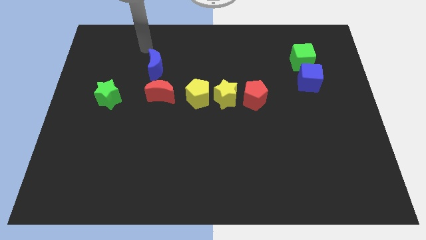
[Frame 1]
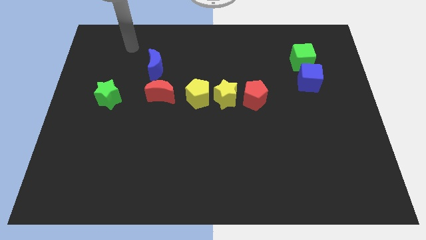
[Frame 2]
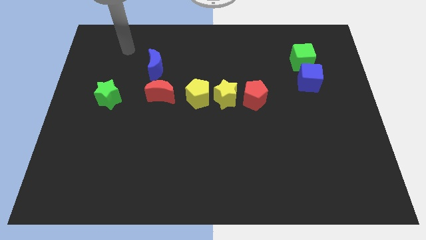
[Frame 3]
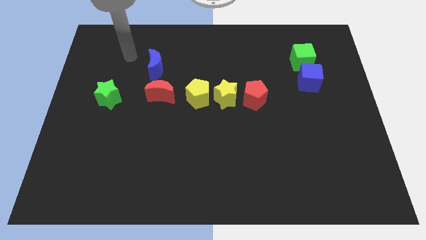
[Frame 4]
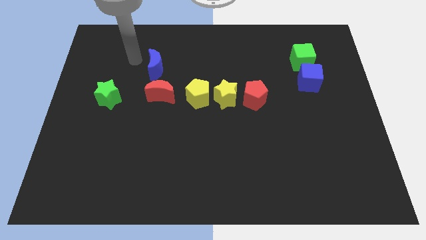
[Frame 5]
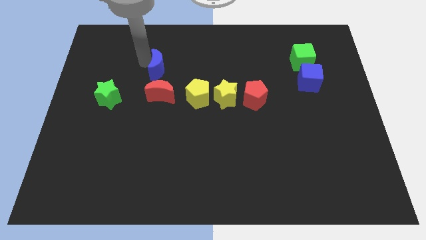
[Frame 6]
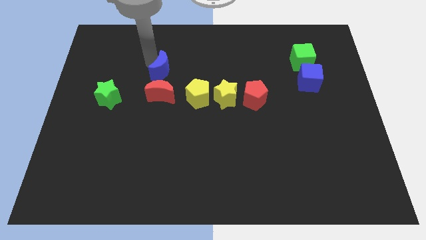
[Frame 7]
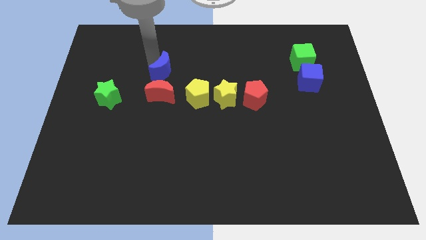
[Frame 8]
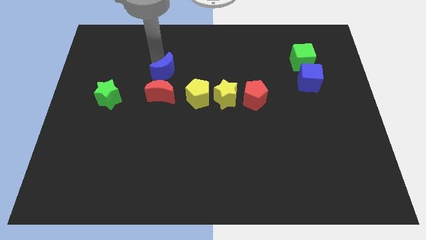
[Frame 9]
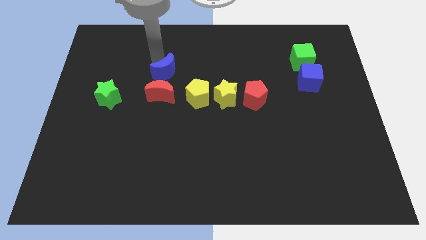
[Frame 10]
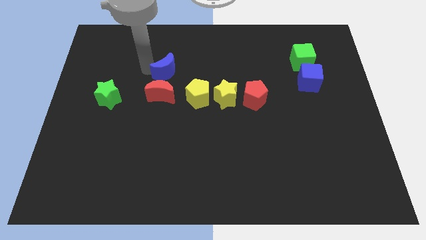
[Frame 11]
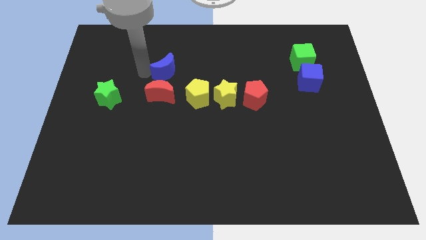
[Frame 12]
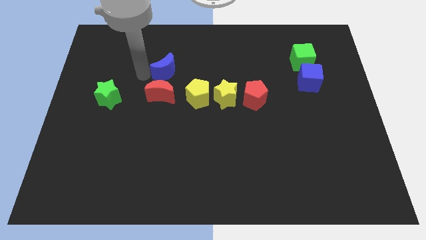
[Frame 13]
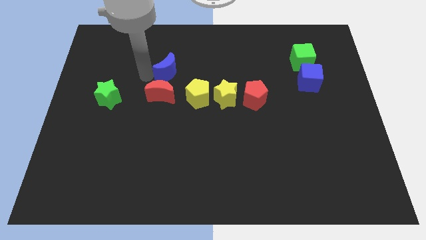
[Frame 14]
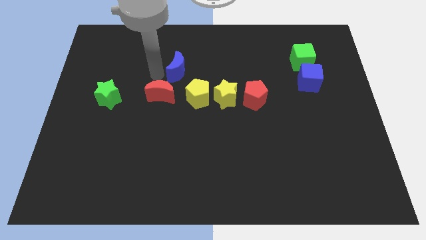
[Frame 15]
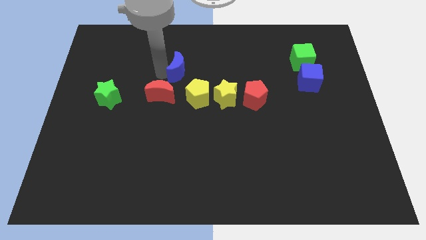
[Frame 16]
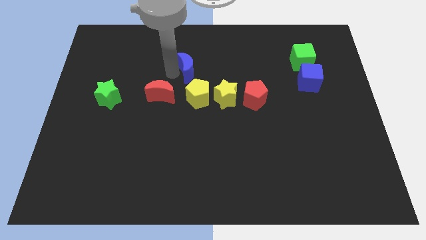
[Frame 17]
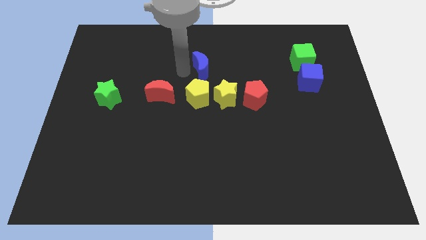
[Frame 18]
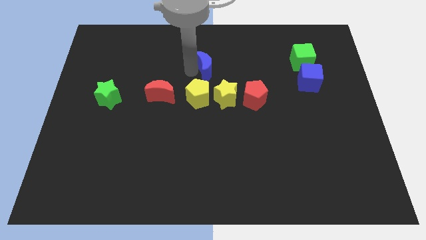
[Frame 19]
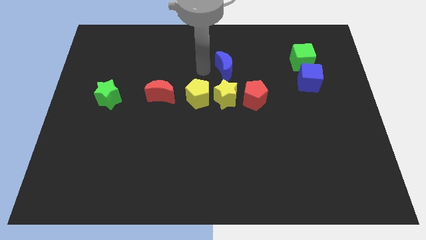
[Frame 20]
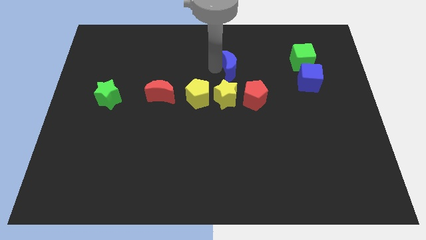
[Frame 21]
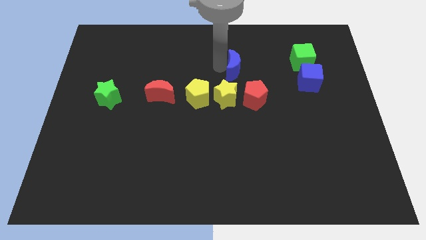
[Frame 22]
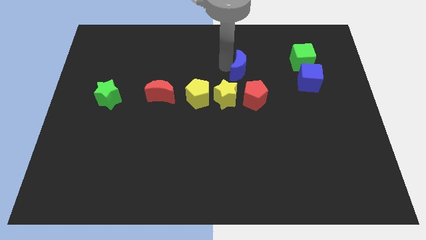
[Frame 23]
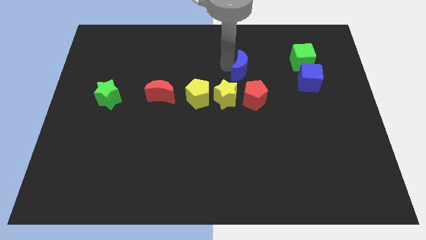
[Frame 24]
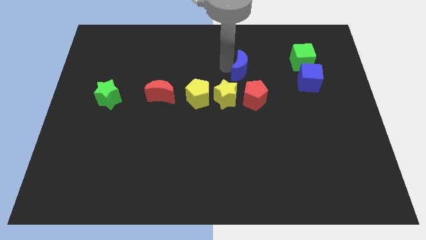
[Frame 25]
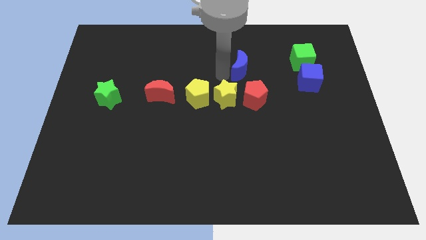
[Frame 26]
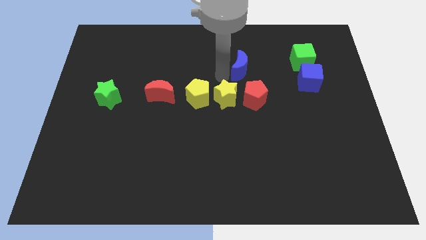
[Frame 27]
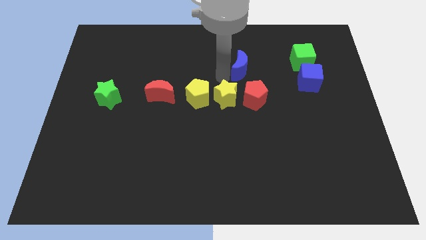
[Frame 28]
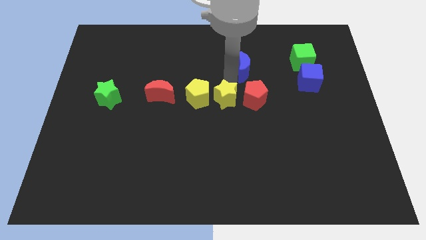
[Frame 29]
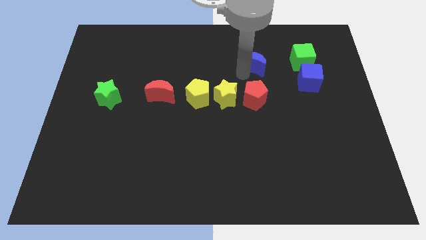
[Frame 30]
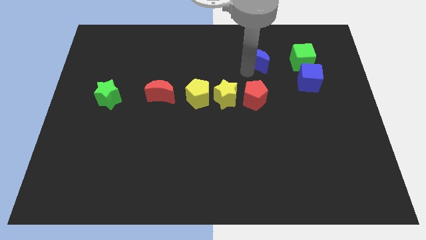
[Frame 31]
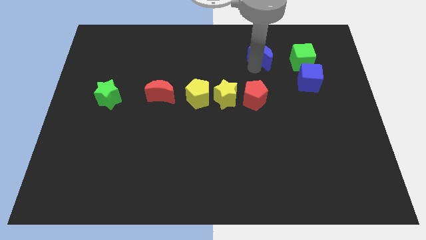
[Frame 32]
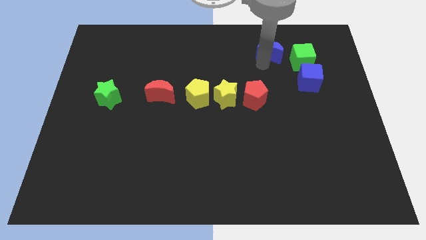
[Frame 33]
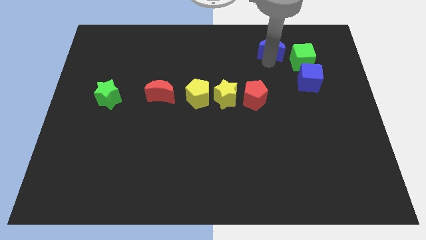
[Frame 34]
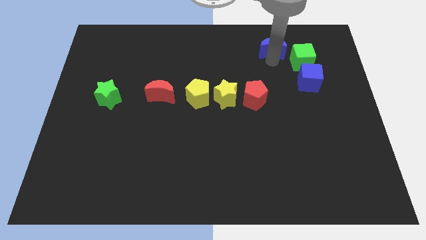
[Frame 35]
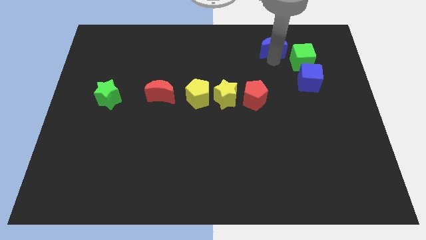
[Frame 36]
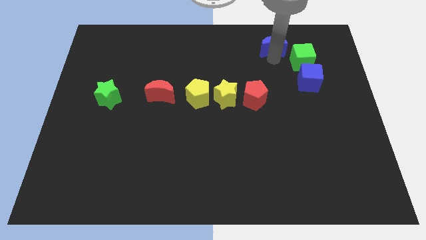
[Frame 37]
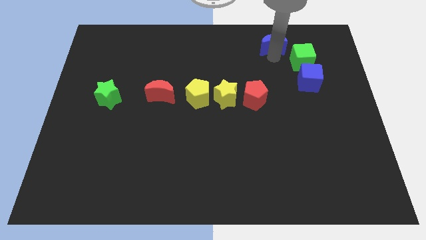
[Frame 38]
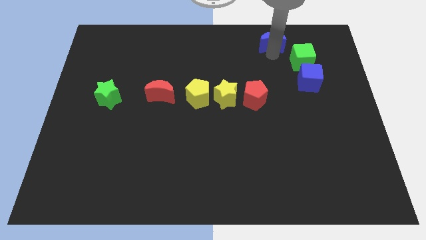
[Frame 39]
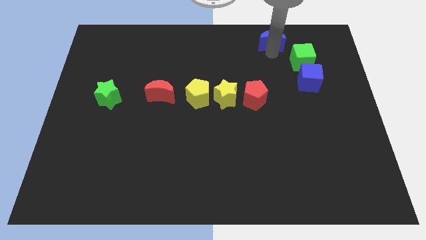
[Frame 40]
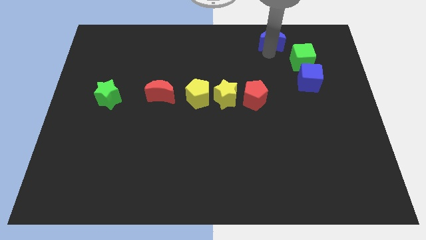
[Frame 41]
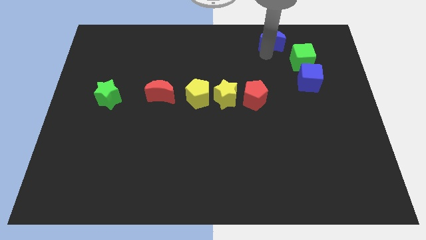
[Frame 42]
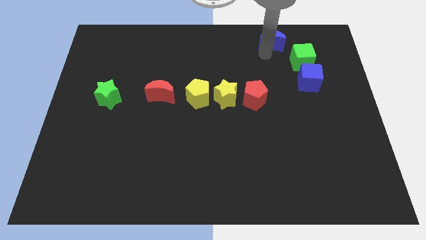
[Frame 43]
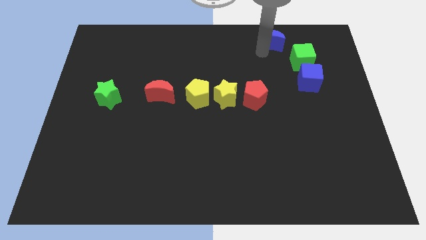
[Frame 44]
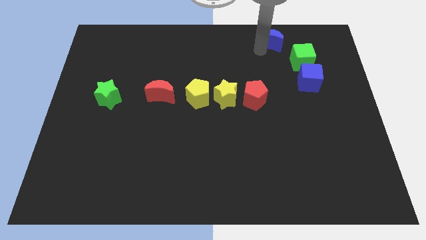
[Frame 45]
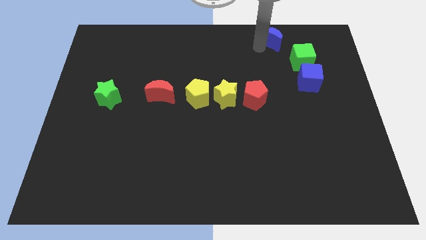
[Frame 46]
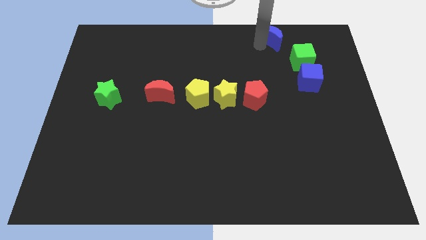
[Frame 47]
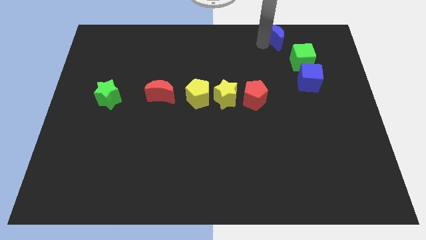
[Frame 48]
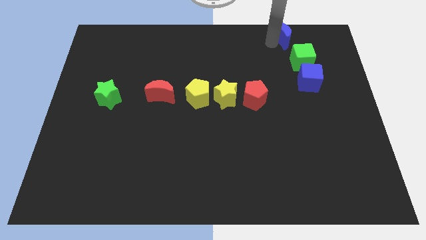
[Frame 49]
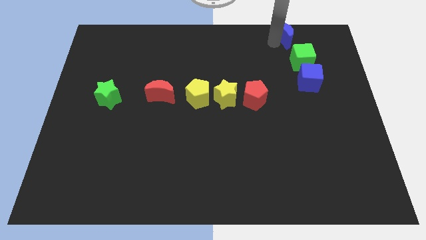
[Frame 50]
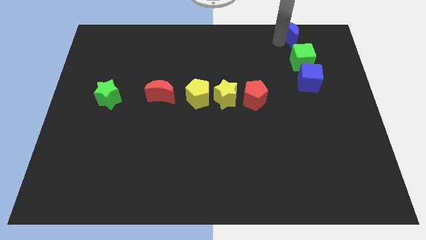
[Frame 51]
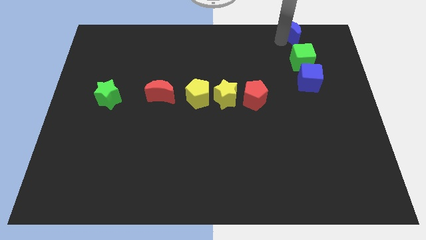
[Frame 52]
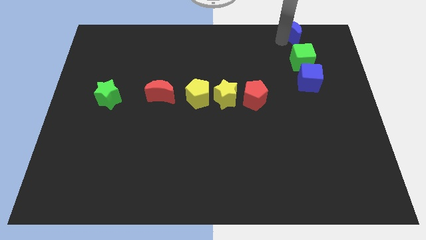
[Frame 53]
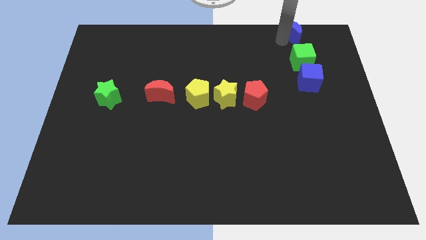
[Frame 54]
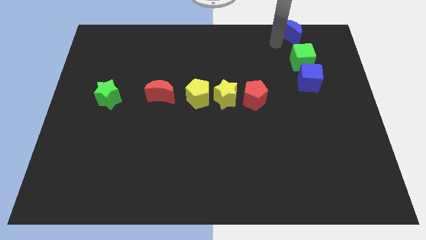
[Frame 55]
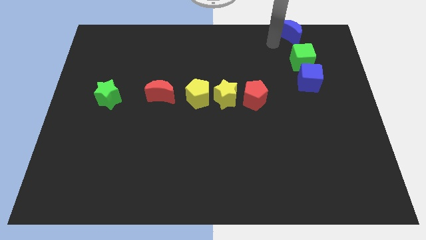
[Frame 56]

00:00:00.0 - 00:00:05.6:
place the blue crescent above the green cube

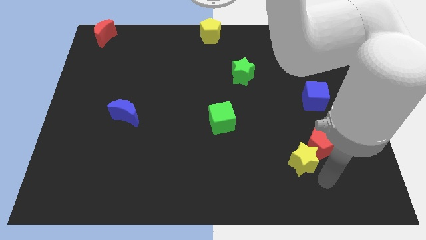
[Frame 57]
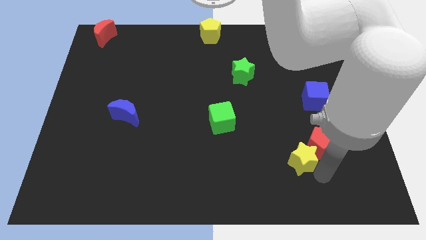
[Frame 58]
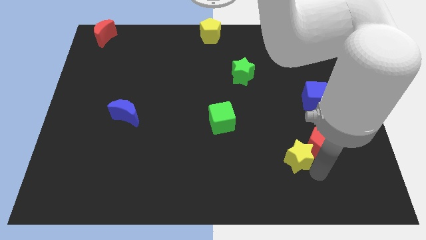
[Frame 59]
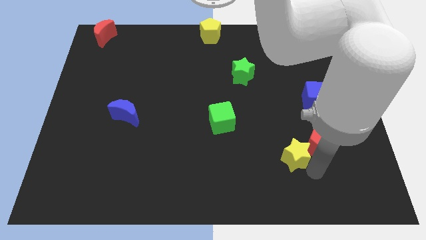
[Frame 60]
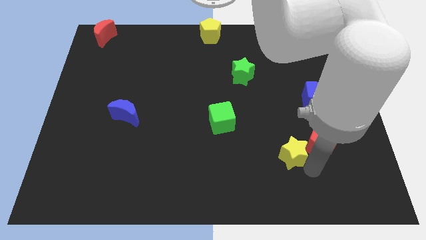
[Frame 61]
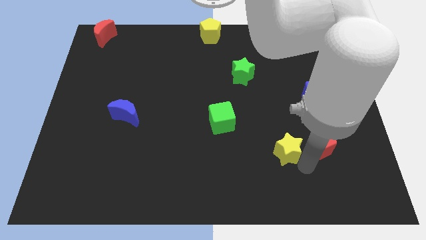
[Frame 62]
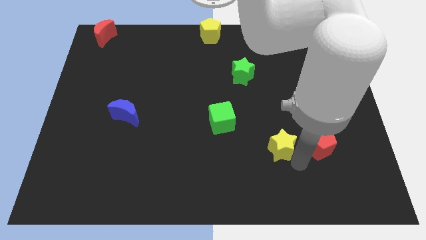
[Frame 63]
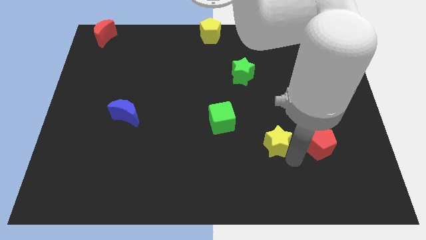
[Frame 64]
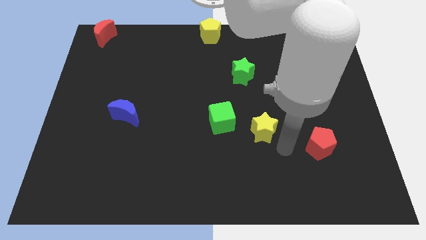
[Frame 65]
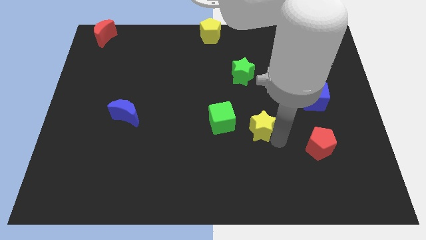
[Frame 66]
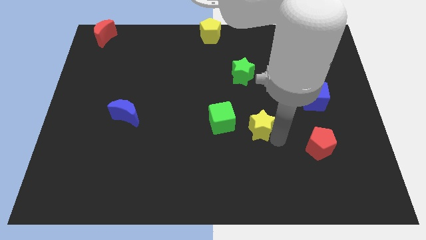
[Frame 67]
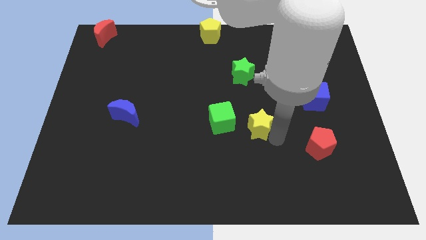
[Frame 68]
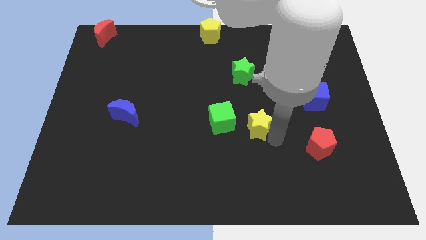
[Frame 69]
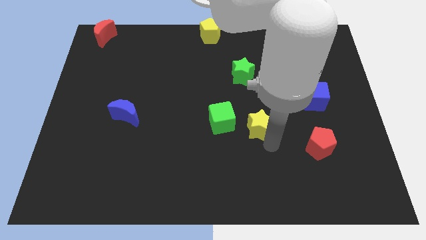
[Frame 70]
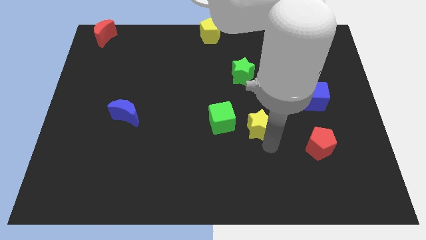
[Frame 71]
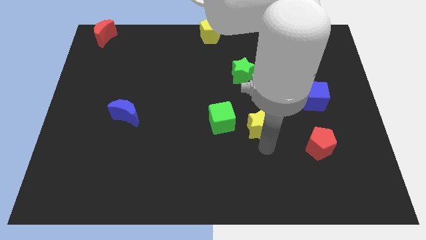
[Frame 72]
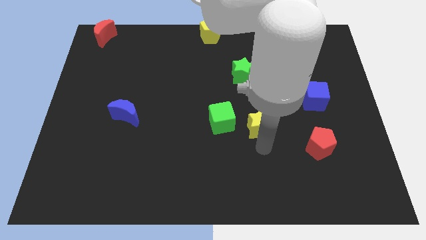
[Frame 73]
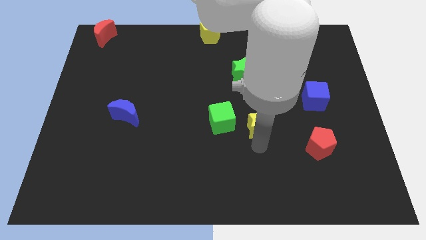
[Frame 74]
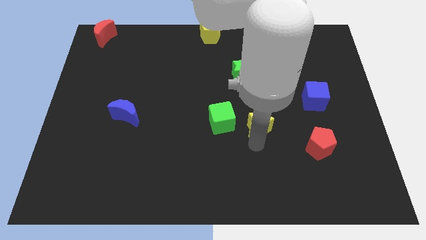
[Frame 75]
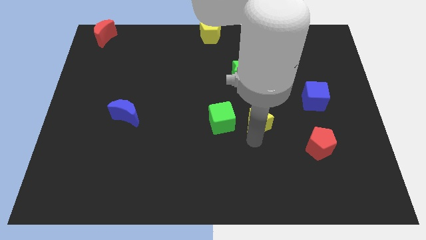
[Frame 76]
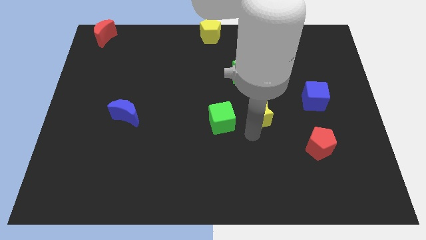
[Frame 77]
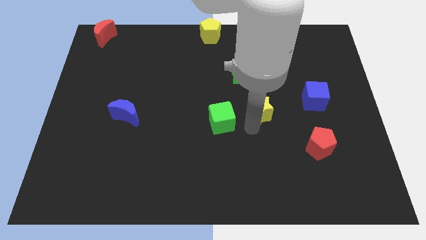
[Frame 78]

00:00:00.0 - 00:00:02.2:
place the yellow star at the right side of the green cube

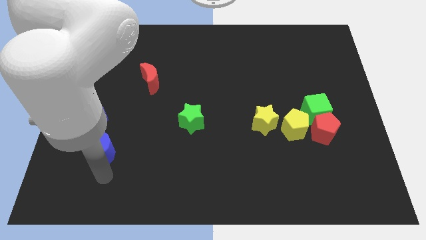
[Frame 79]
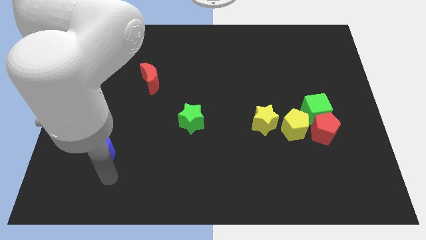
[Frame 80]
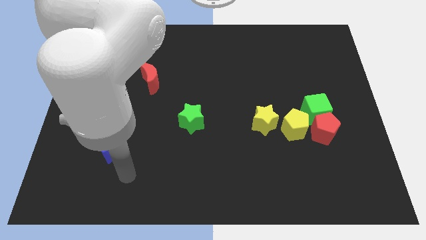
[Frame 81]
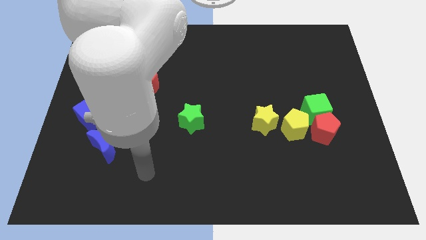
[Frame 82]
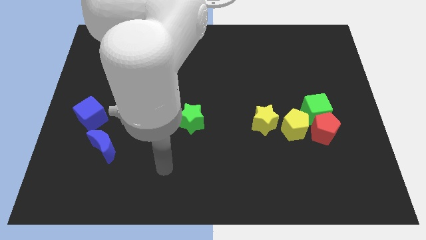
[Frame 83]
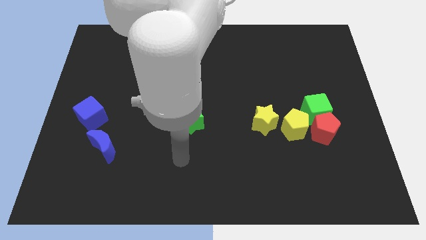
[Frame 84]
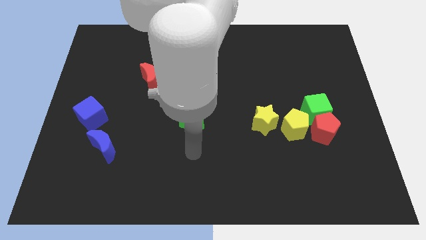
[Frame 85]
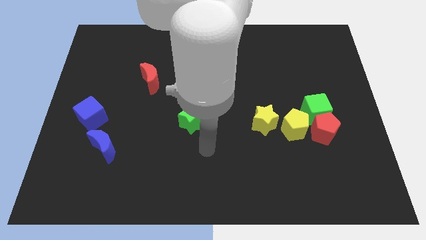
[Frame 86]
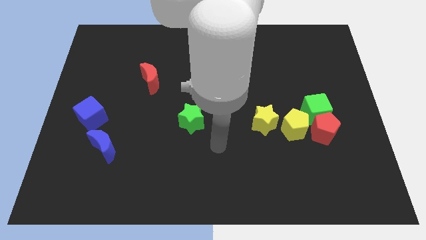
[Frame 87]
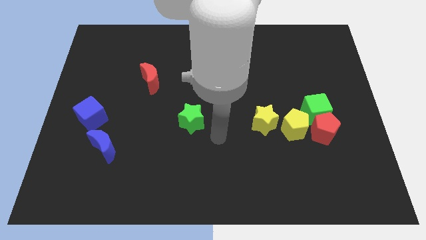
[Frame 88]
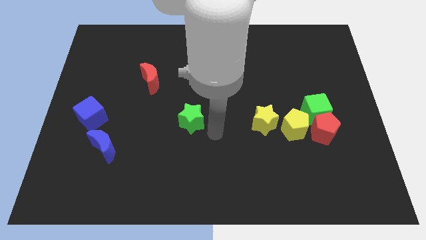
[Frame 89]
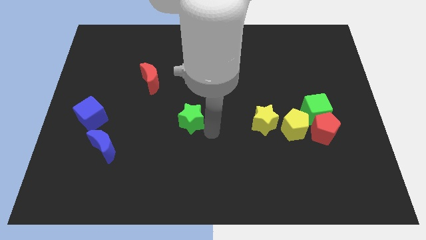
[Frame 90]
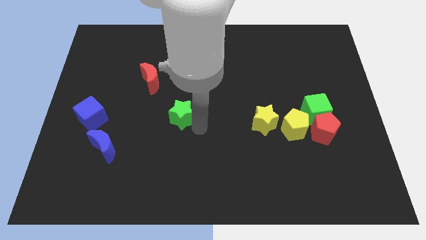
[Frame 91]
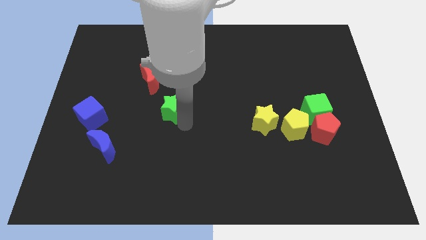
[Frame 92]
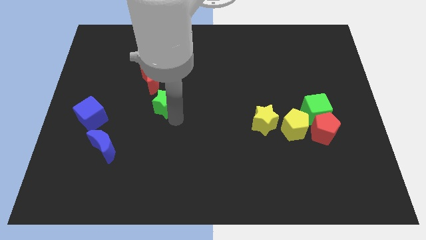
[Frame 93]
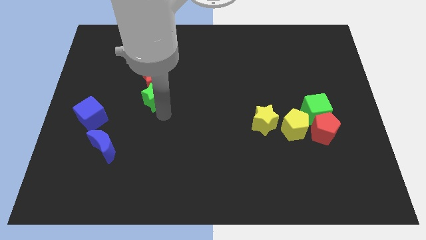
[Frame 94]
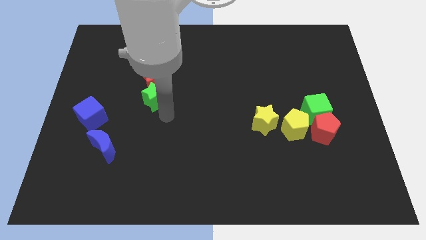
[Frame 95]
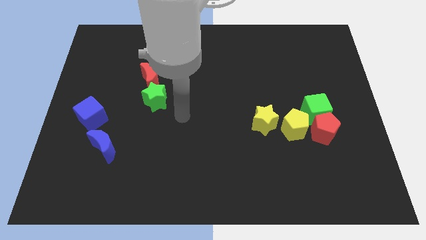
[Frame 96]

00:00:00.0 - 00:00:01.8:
move the green star to the bottom of the red crescent
